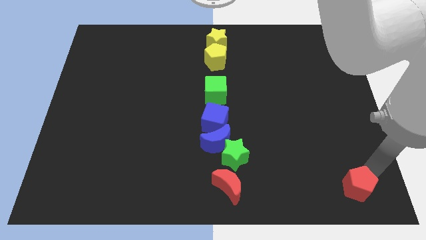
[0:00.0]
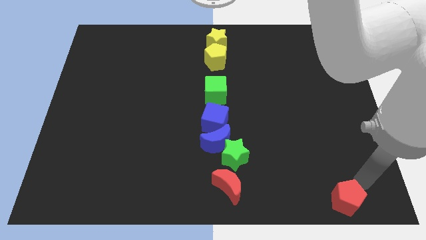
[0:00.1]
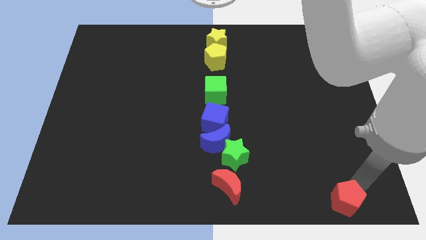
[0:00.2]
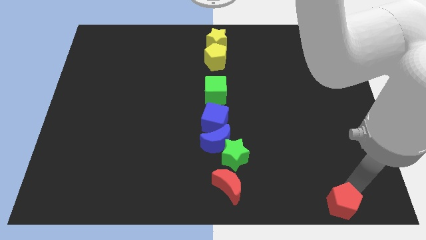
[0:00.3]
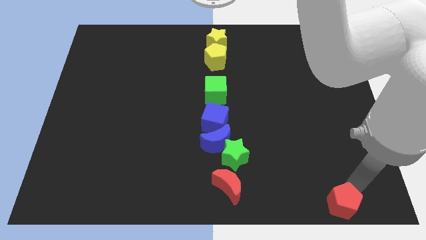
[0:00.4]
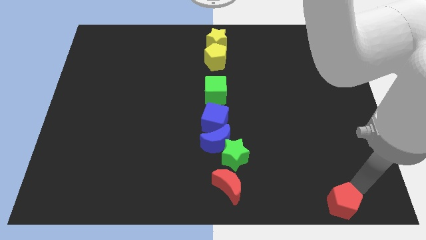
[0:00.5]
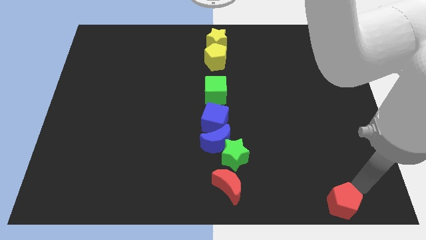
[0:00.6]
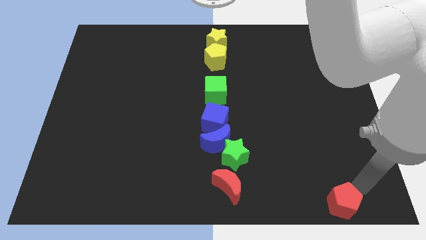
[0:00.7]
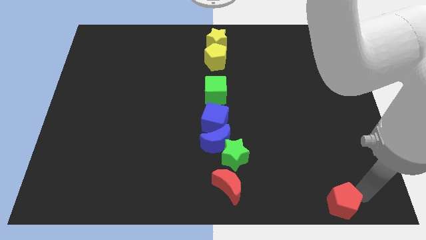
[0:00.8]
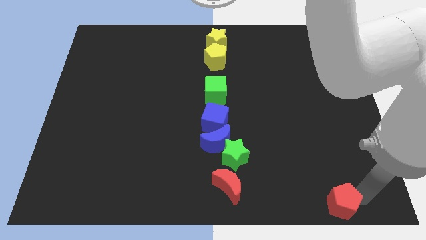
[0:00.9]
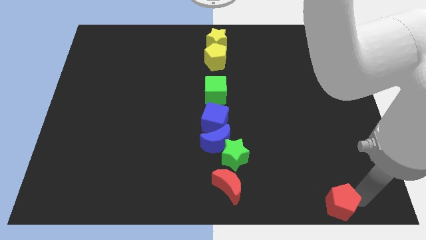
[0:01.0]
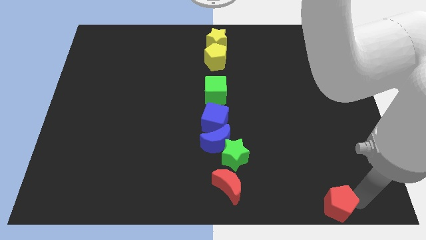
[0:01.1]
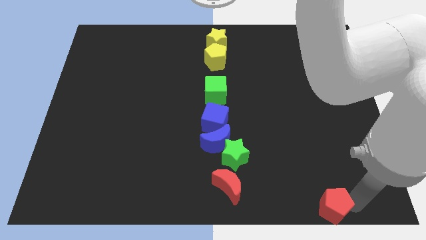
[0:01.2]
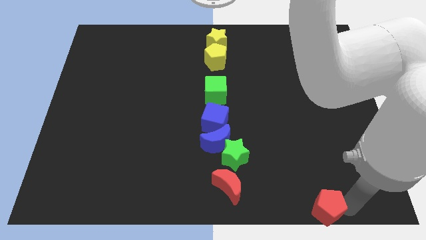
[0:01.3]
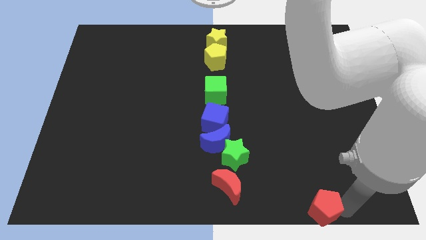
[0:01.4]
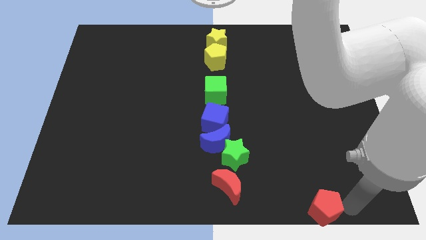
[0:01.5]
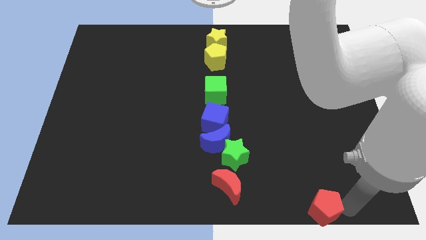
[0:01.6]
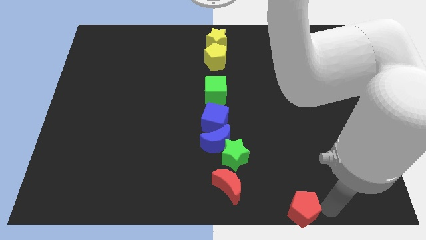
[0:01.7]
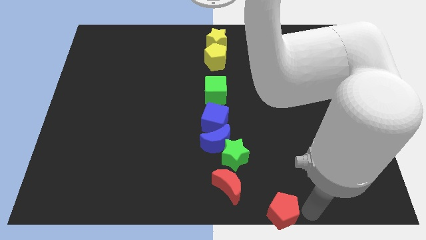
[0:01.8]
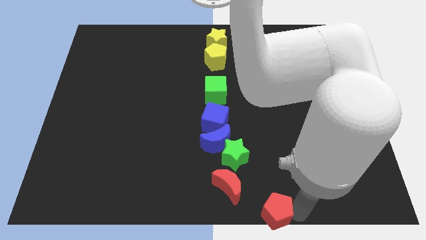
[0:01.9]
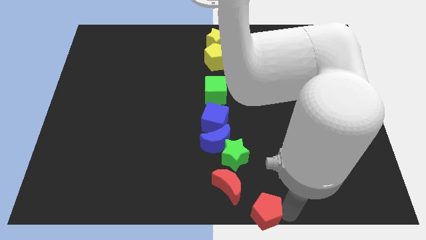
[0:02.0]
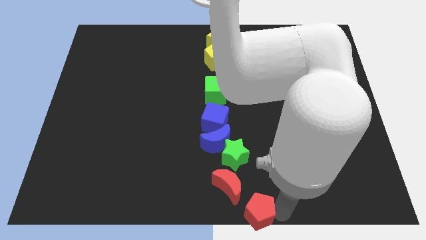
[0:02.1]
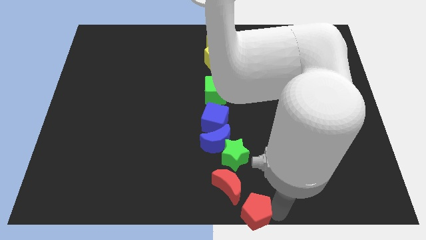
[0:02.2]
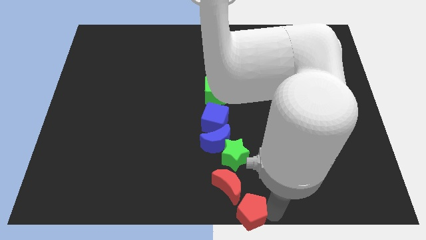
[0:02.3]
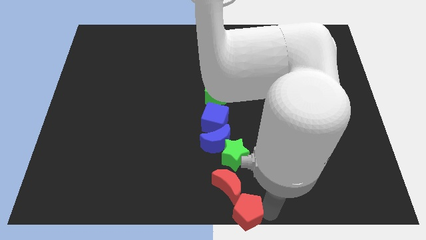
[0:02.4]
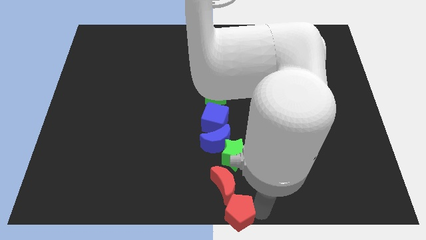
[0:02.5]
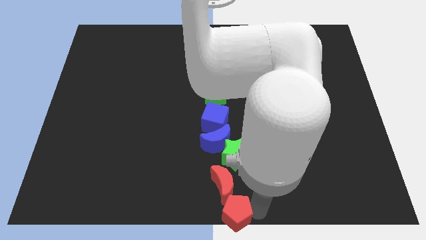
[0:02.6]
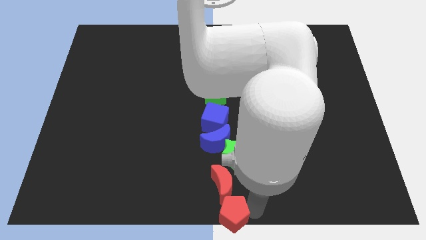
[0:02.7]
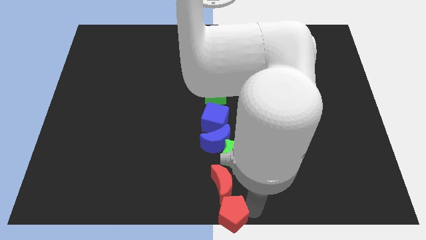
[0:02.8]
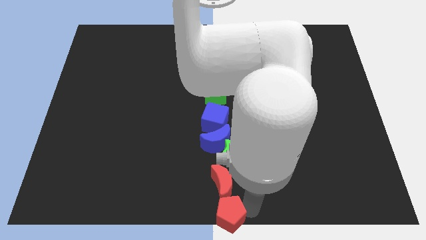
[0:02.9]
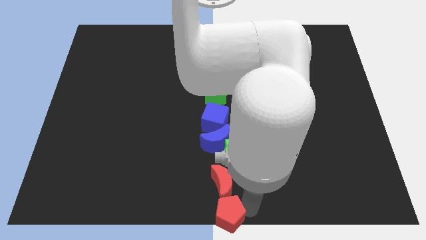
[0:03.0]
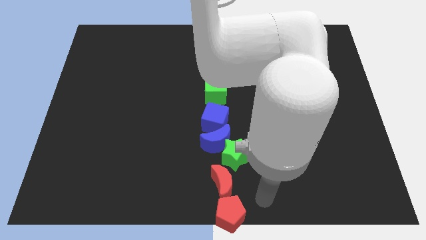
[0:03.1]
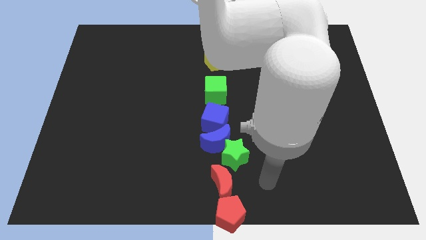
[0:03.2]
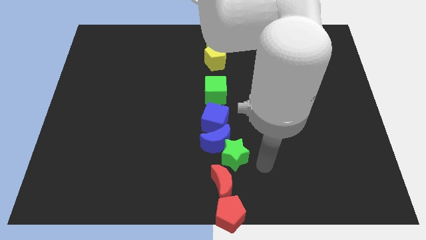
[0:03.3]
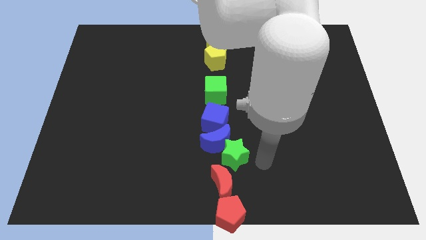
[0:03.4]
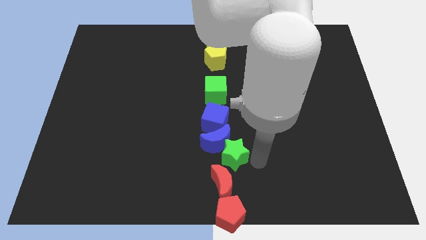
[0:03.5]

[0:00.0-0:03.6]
place the red pentagon at the bottom center of the board

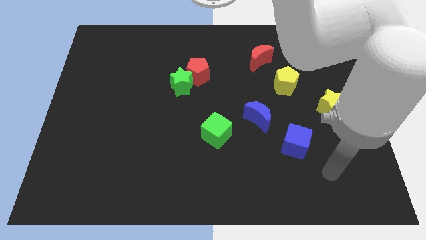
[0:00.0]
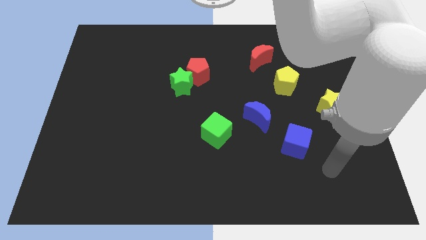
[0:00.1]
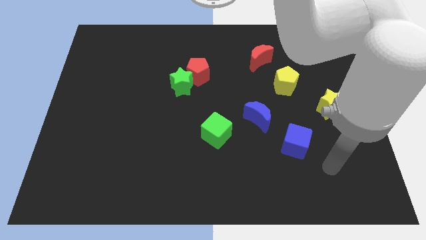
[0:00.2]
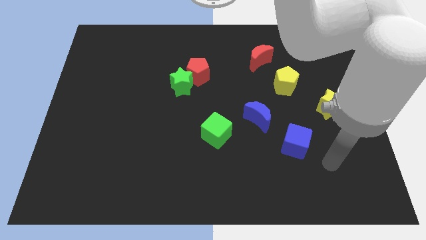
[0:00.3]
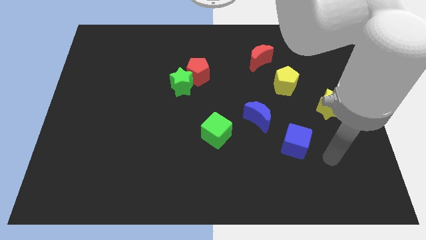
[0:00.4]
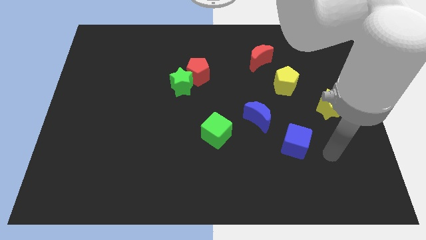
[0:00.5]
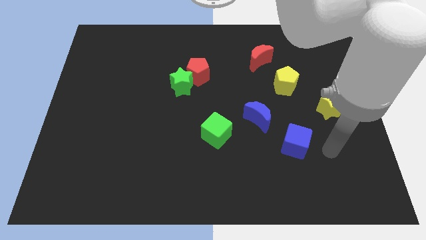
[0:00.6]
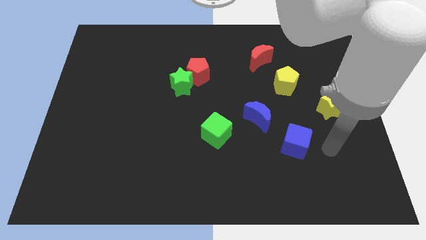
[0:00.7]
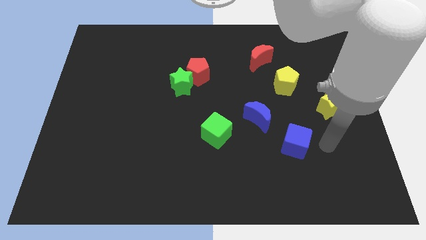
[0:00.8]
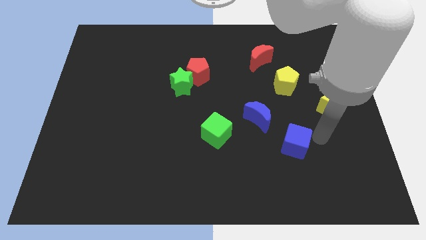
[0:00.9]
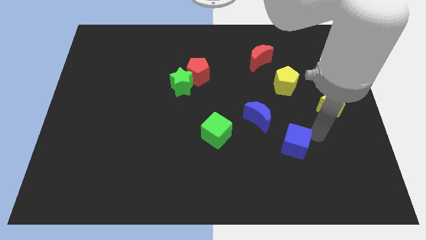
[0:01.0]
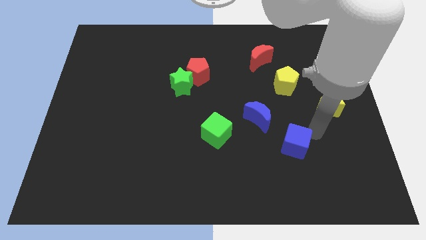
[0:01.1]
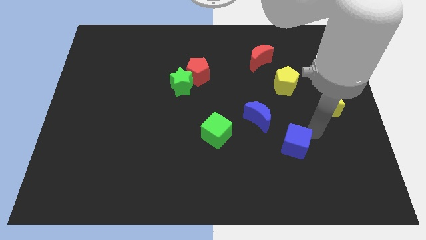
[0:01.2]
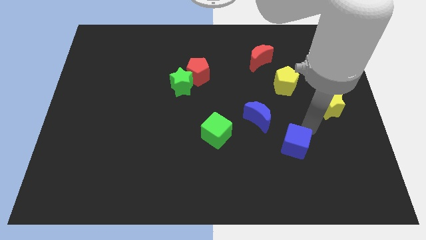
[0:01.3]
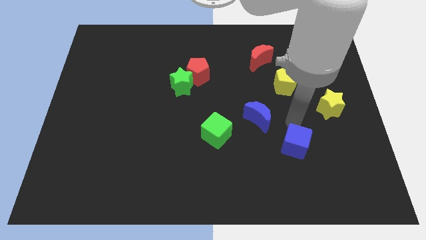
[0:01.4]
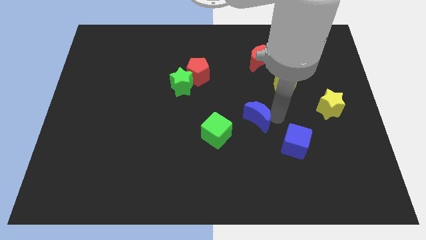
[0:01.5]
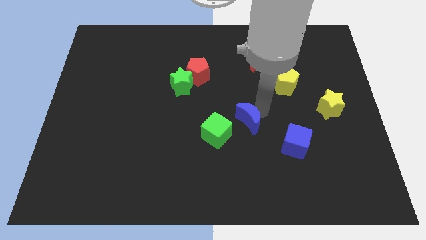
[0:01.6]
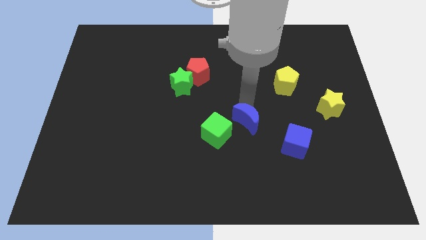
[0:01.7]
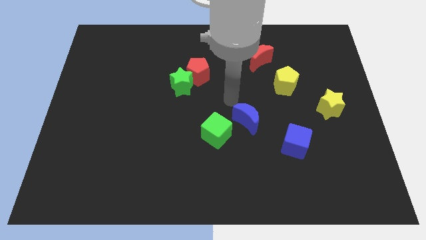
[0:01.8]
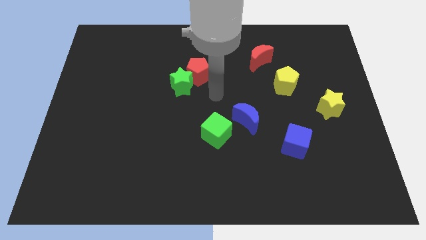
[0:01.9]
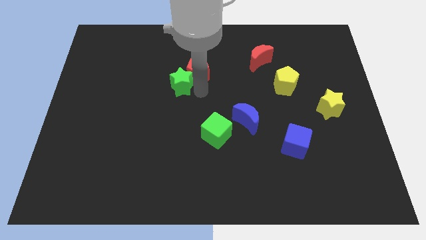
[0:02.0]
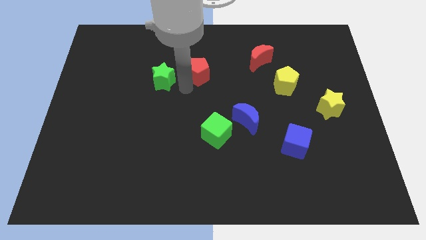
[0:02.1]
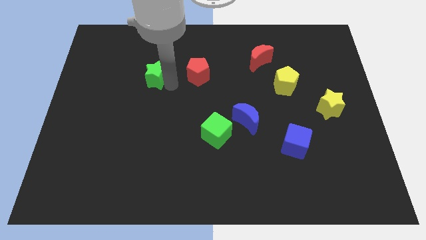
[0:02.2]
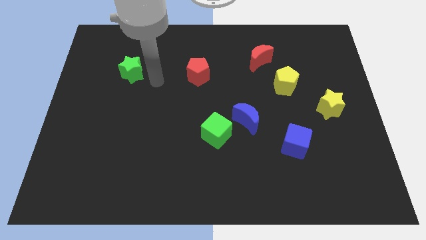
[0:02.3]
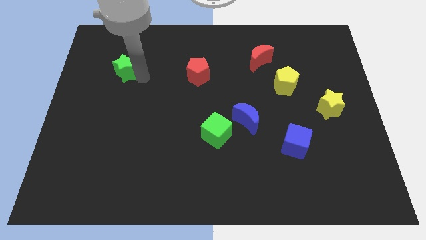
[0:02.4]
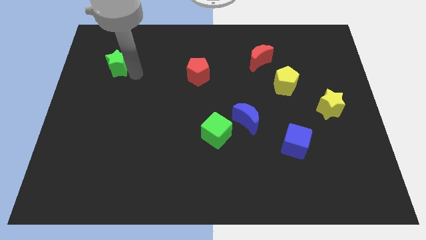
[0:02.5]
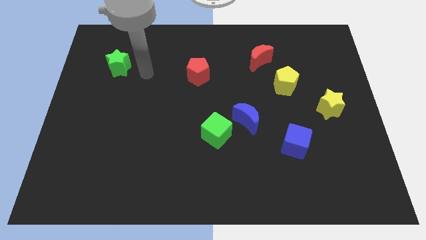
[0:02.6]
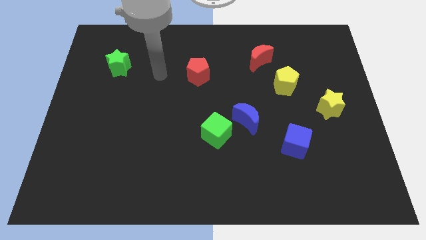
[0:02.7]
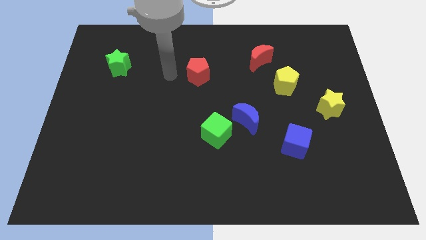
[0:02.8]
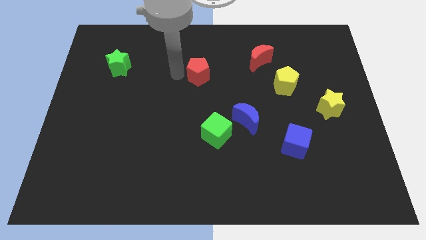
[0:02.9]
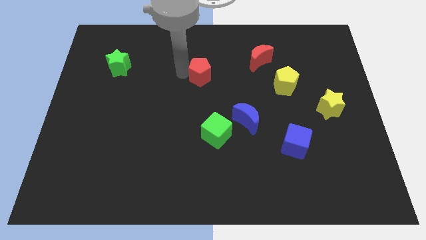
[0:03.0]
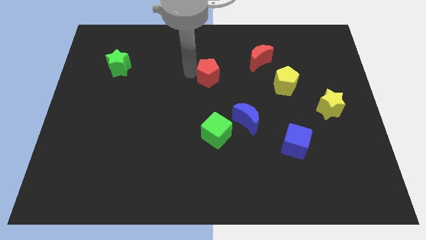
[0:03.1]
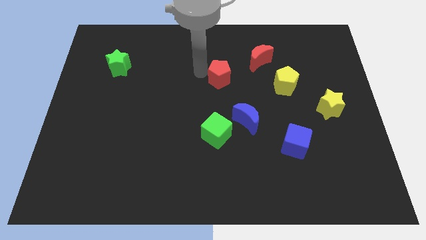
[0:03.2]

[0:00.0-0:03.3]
separate the green star and red pentagon from each other

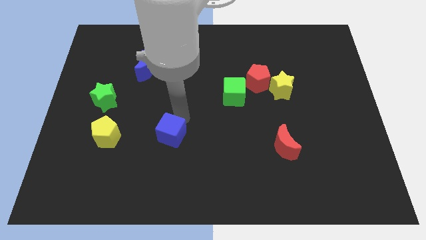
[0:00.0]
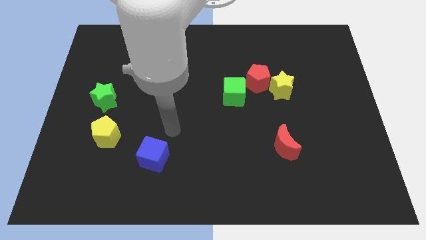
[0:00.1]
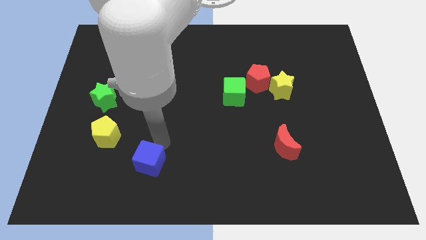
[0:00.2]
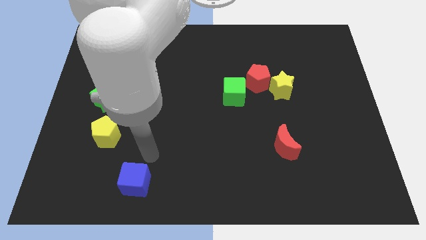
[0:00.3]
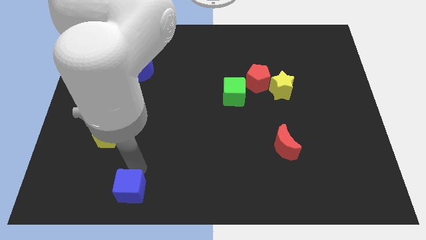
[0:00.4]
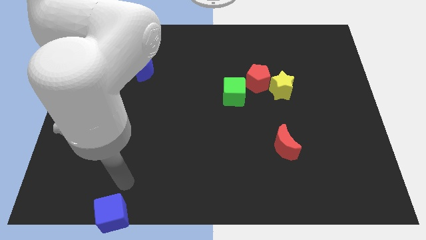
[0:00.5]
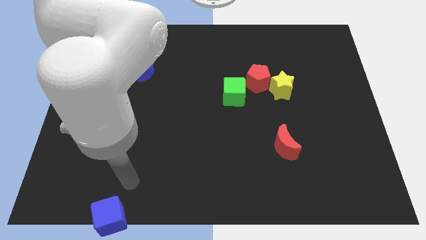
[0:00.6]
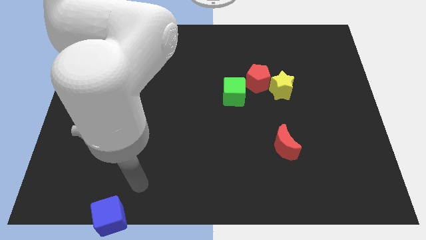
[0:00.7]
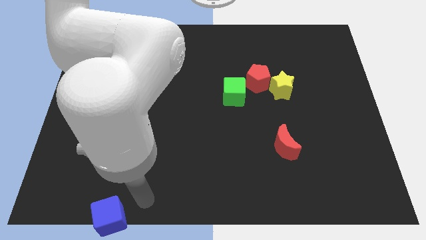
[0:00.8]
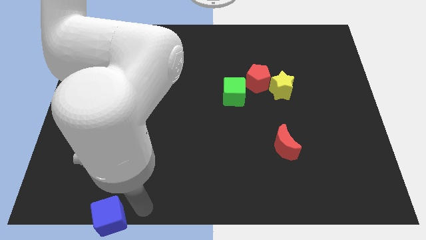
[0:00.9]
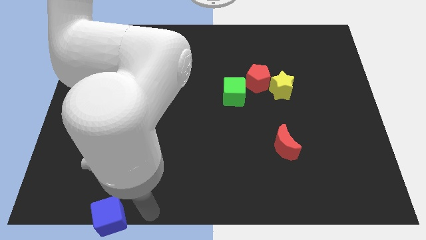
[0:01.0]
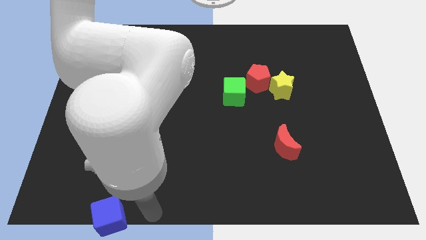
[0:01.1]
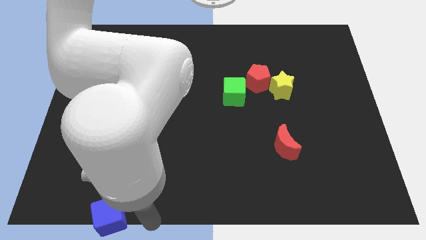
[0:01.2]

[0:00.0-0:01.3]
push the blue cube to the bottom

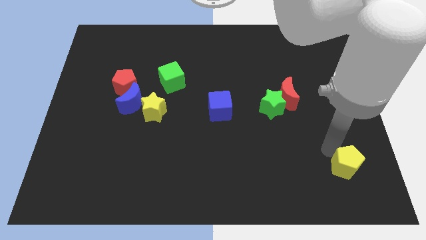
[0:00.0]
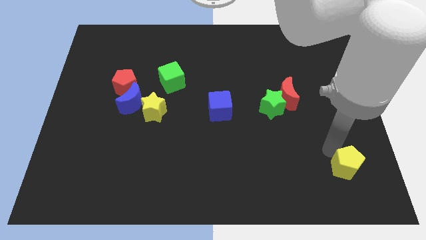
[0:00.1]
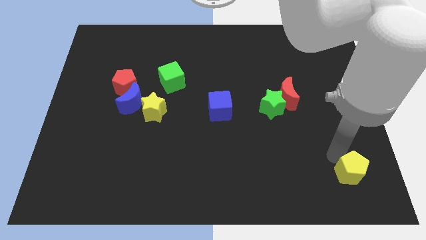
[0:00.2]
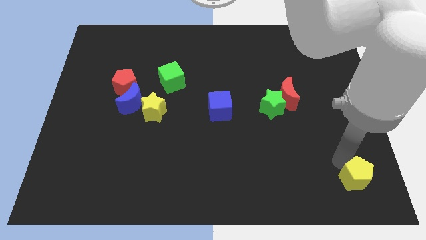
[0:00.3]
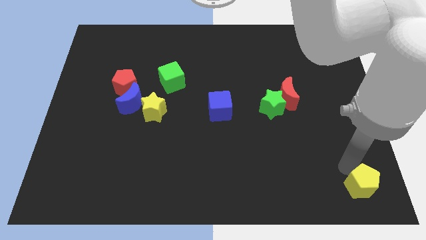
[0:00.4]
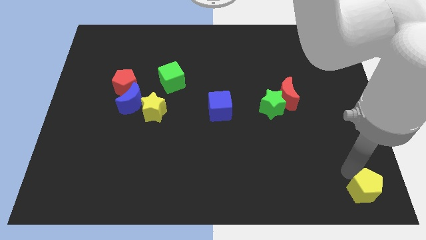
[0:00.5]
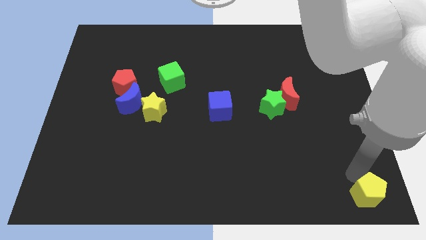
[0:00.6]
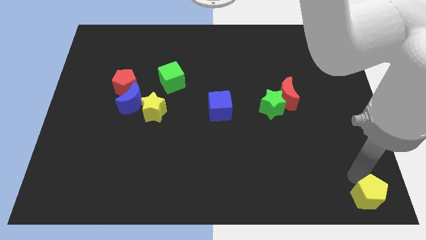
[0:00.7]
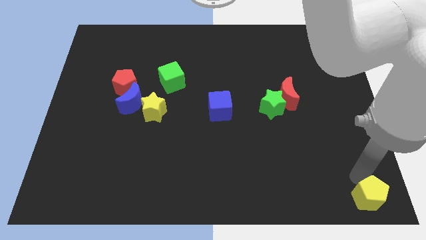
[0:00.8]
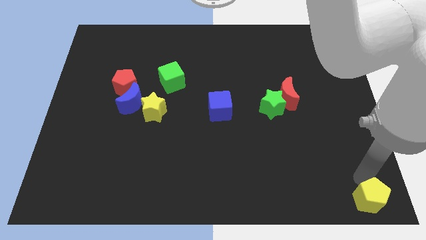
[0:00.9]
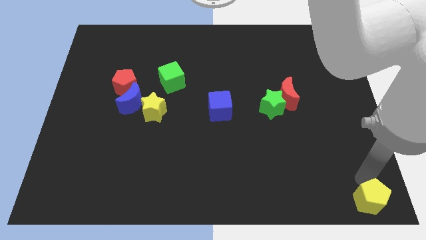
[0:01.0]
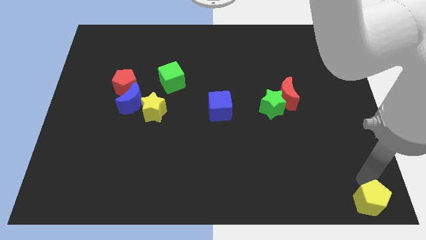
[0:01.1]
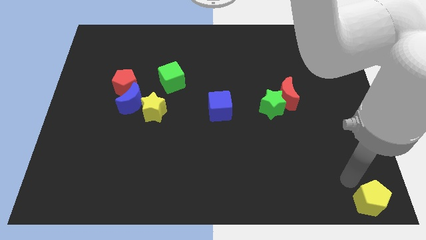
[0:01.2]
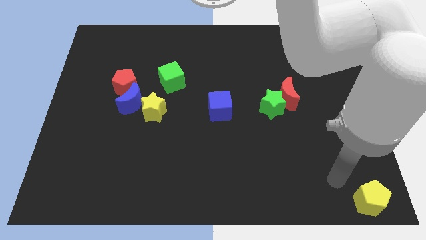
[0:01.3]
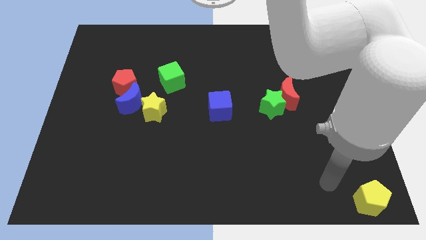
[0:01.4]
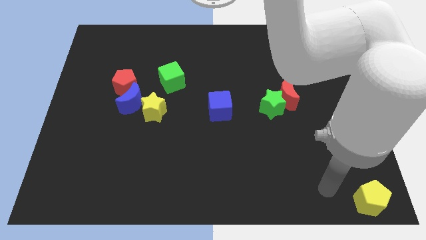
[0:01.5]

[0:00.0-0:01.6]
place yellow pentagon to the bottom right corner of the board
